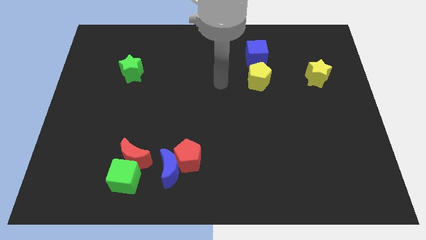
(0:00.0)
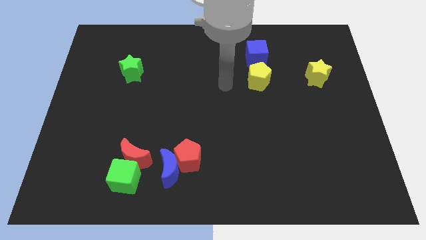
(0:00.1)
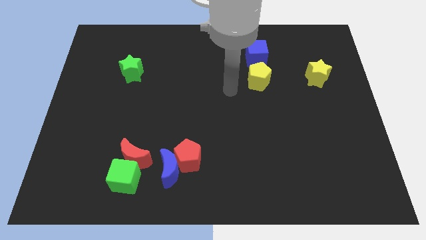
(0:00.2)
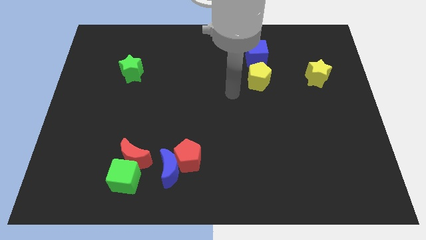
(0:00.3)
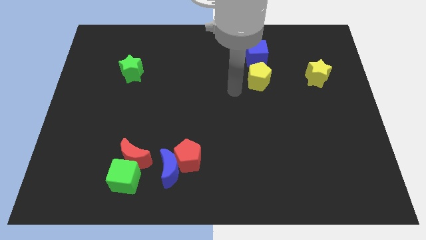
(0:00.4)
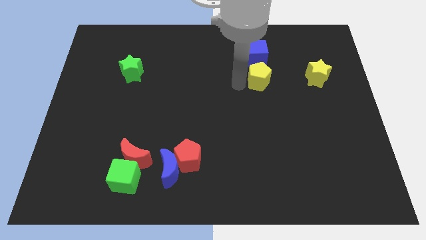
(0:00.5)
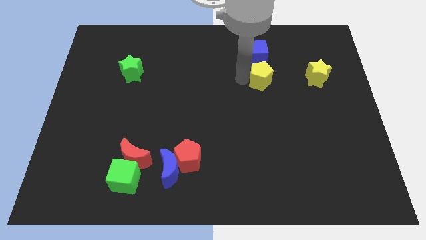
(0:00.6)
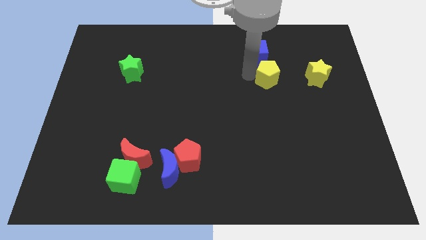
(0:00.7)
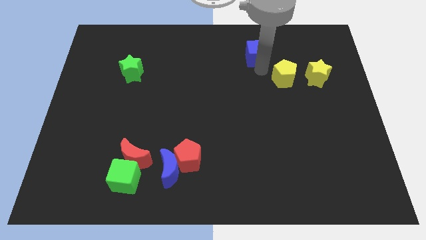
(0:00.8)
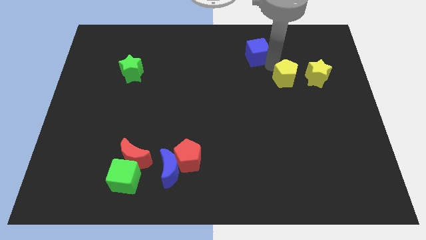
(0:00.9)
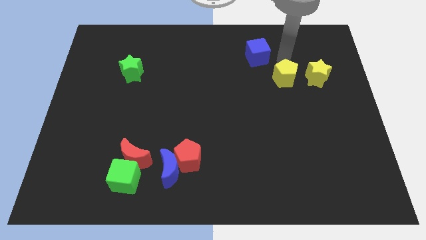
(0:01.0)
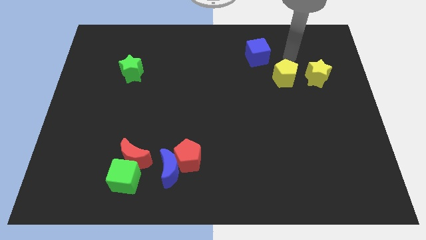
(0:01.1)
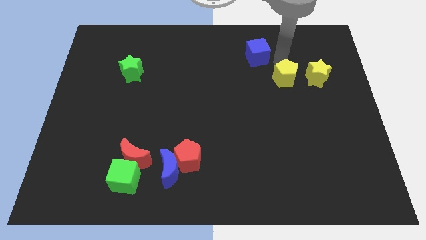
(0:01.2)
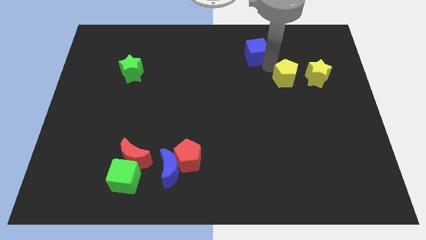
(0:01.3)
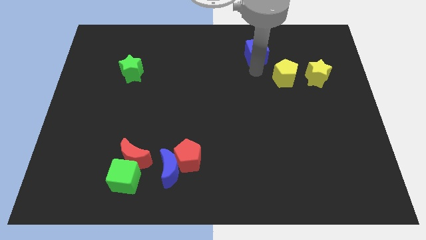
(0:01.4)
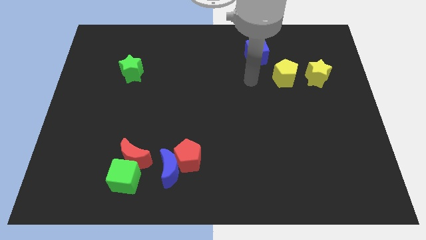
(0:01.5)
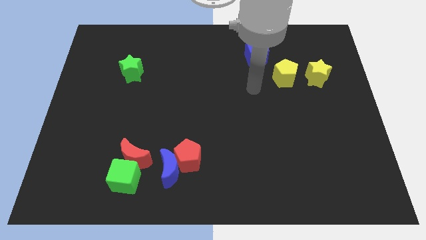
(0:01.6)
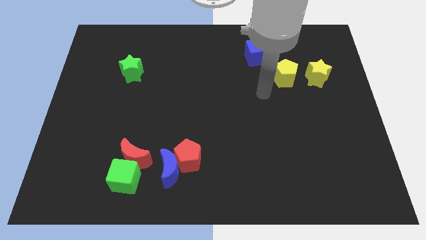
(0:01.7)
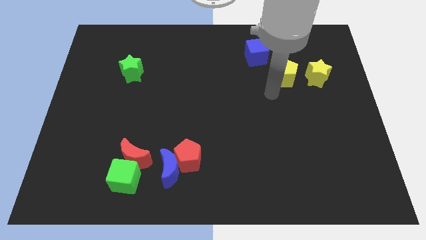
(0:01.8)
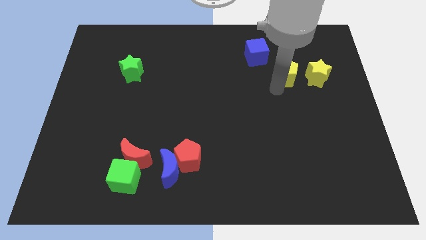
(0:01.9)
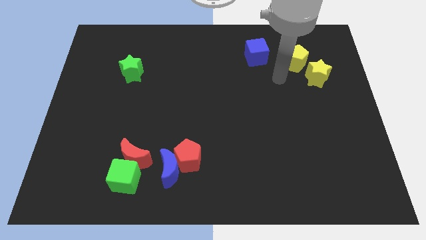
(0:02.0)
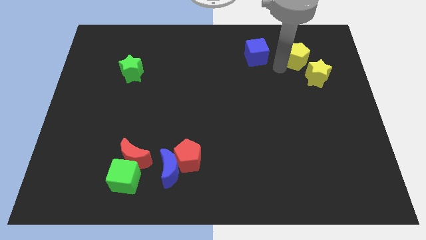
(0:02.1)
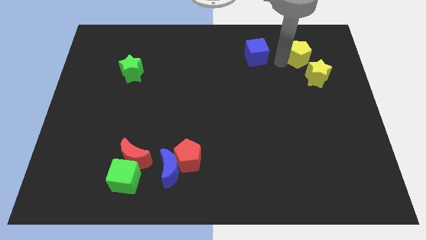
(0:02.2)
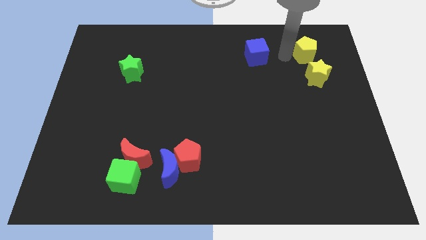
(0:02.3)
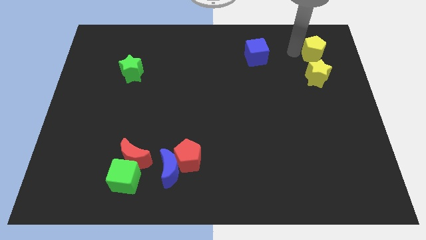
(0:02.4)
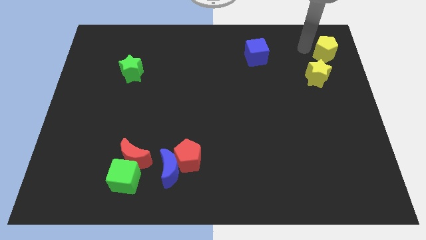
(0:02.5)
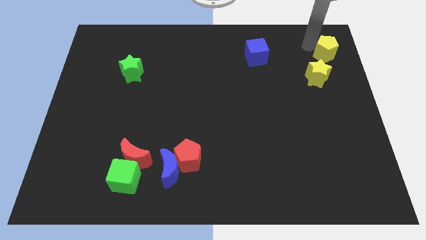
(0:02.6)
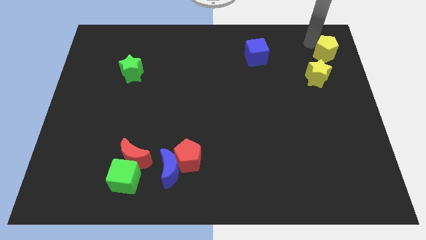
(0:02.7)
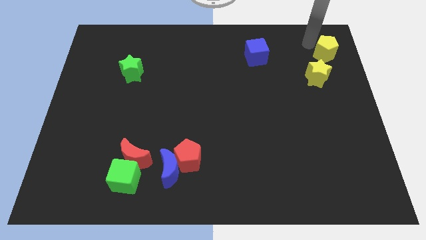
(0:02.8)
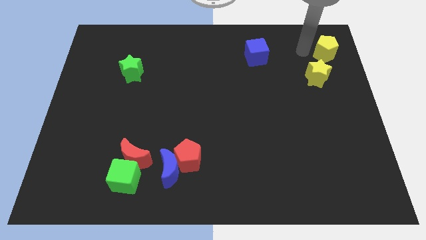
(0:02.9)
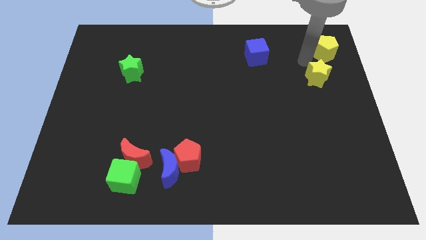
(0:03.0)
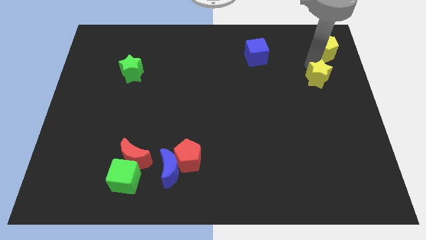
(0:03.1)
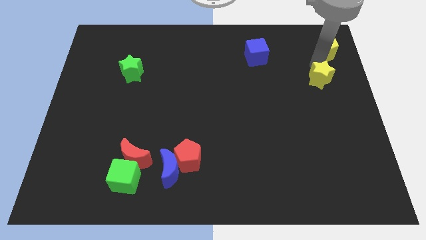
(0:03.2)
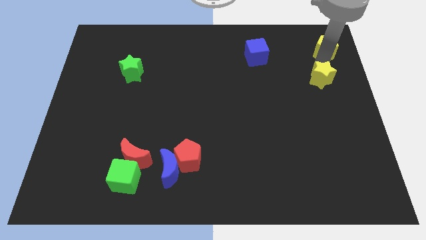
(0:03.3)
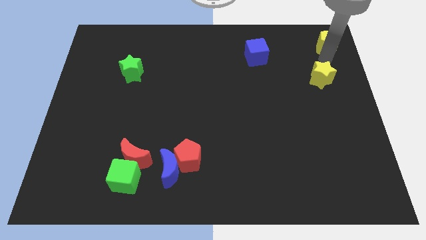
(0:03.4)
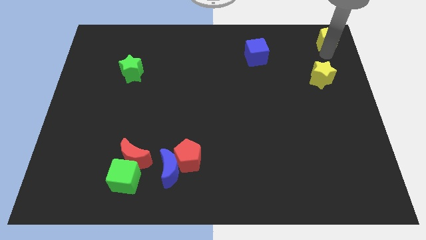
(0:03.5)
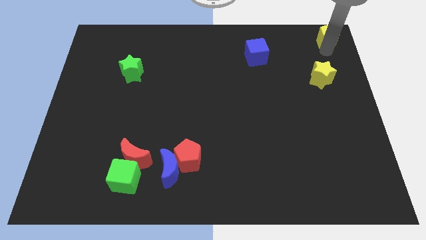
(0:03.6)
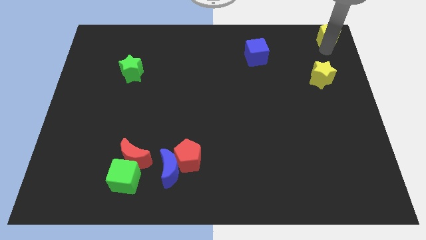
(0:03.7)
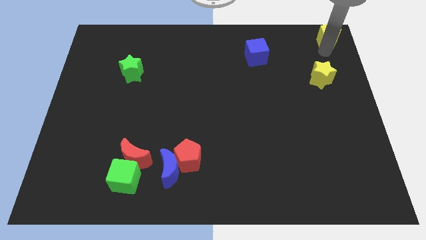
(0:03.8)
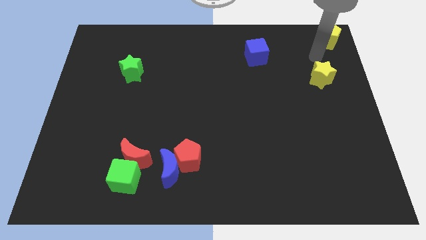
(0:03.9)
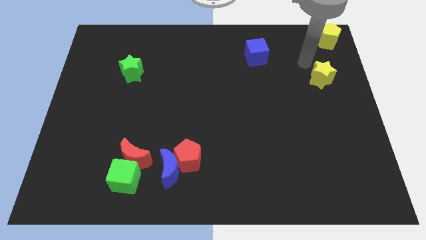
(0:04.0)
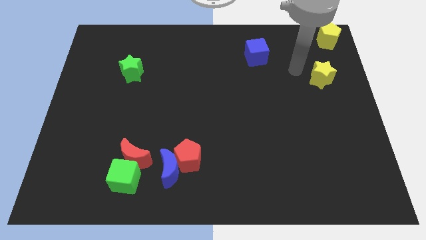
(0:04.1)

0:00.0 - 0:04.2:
move yellow pentagon to the top right corner

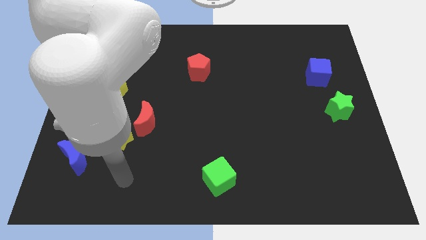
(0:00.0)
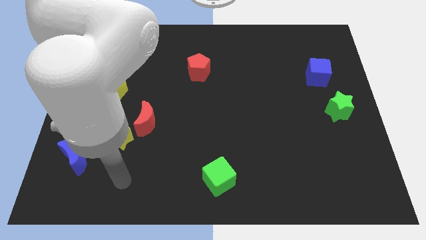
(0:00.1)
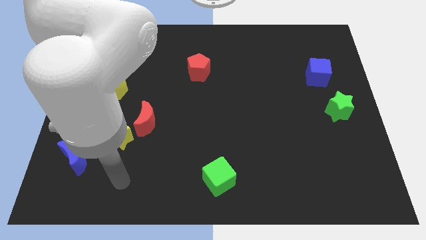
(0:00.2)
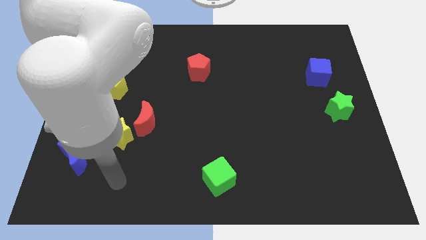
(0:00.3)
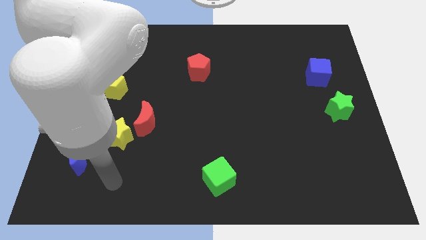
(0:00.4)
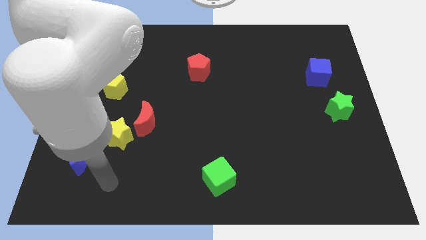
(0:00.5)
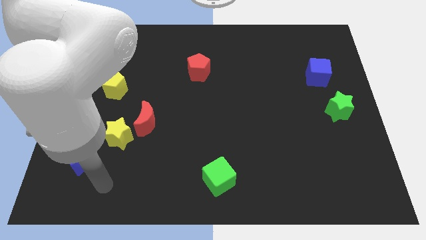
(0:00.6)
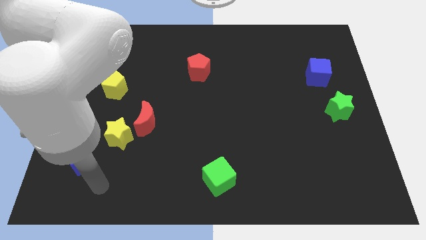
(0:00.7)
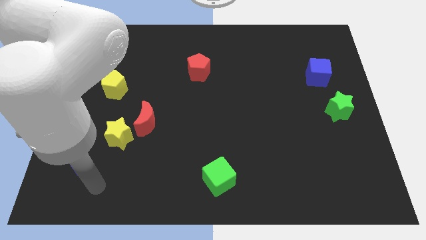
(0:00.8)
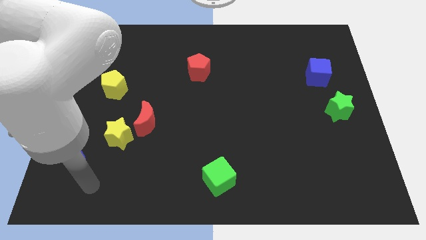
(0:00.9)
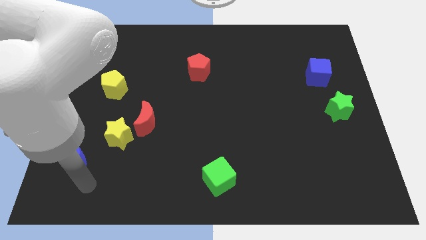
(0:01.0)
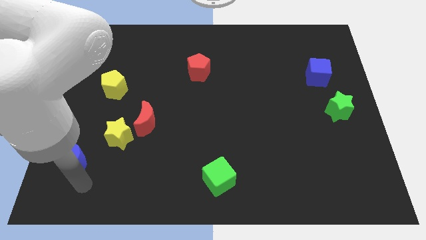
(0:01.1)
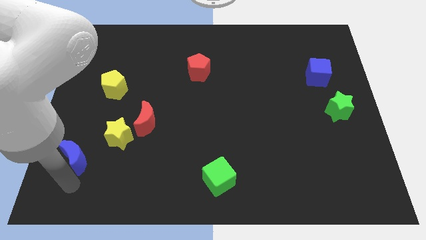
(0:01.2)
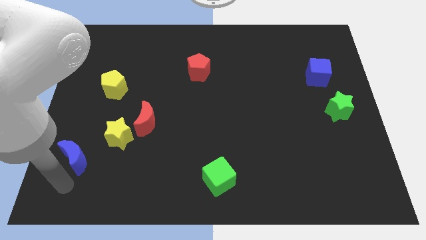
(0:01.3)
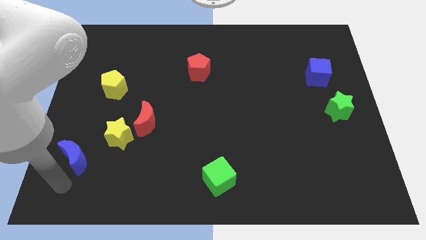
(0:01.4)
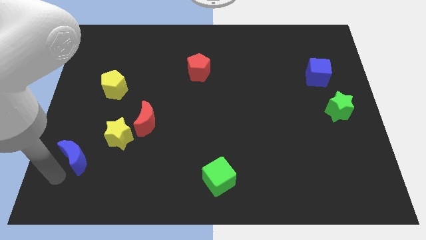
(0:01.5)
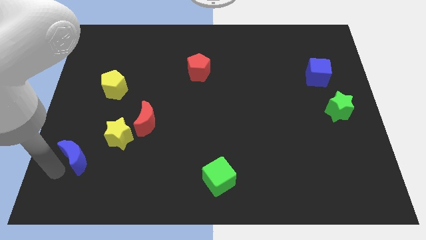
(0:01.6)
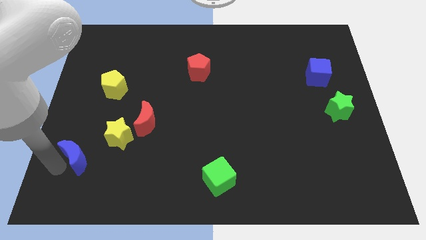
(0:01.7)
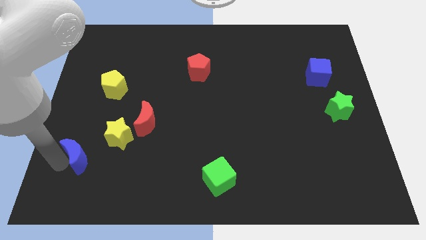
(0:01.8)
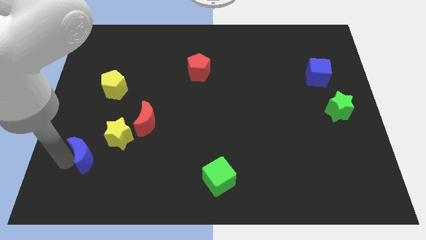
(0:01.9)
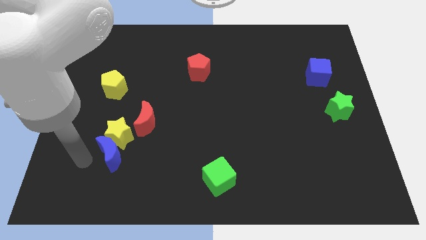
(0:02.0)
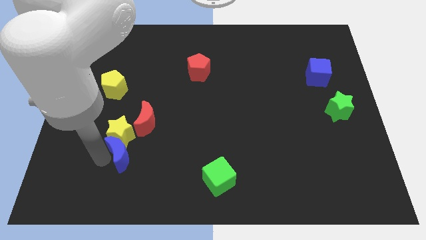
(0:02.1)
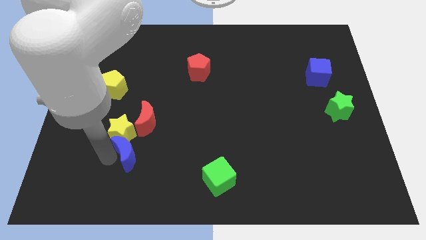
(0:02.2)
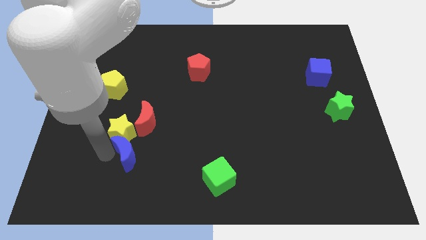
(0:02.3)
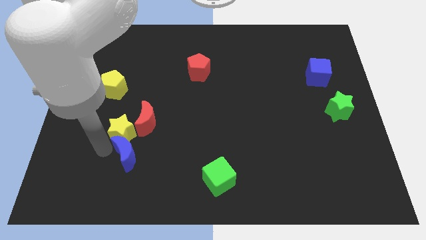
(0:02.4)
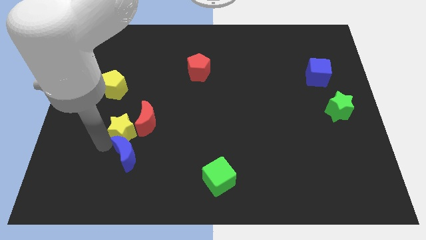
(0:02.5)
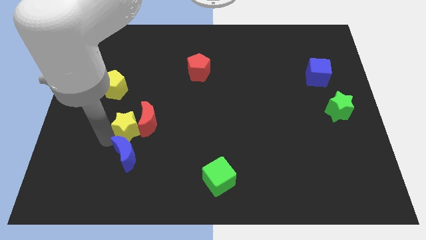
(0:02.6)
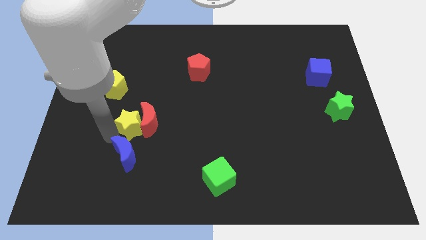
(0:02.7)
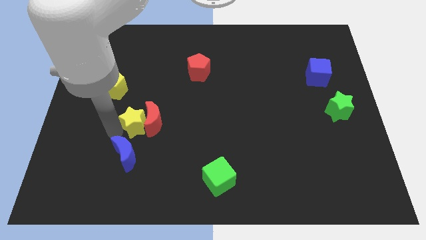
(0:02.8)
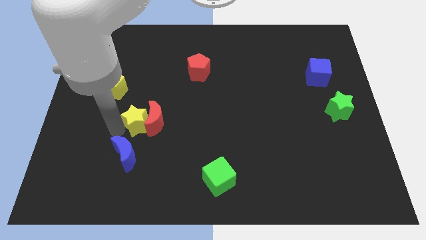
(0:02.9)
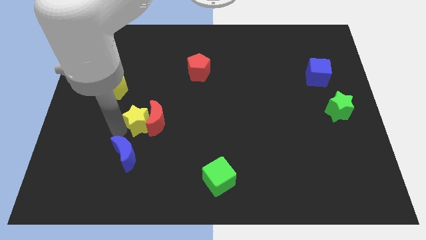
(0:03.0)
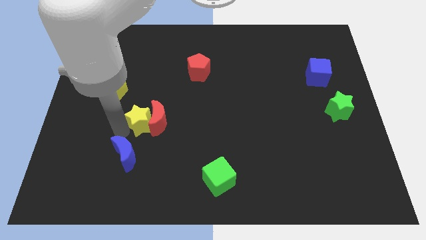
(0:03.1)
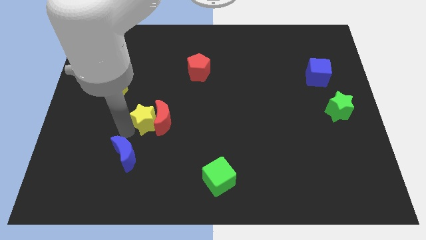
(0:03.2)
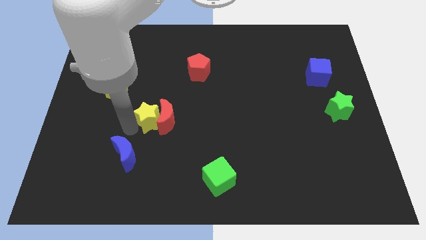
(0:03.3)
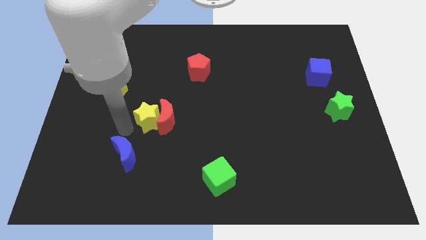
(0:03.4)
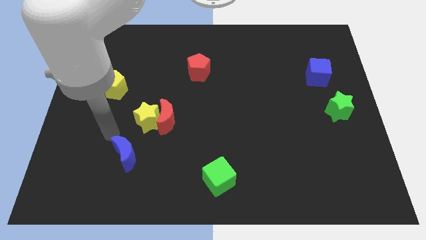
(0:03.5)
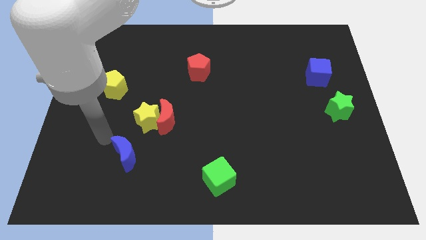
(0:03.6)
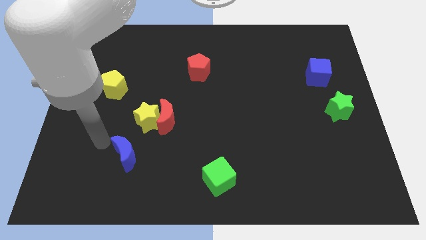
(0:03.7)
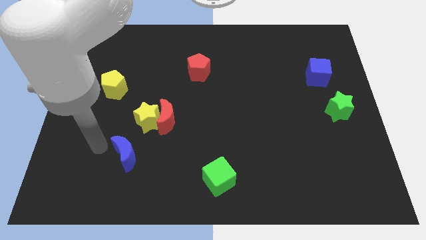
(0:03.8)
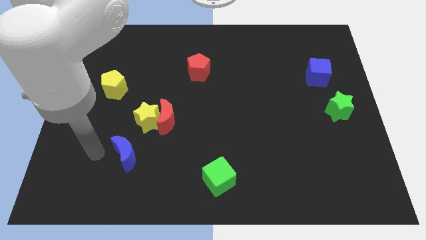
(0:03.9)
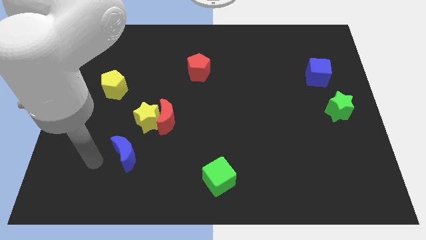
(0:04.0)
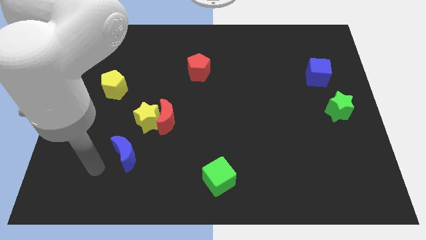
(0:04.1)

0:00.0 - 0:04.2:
move the blue crescent below the yellow star

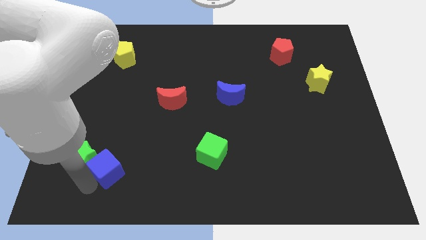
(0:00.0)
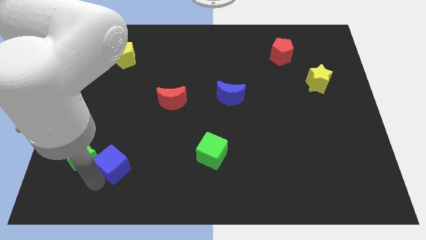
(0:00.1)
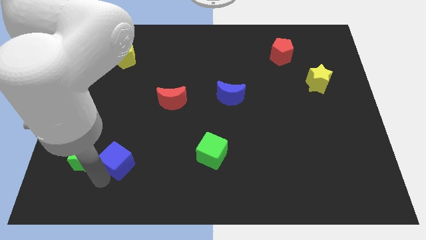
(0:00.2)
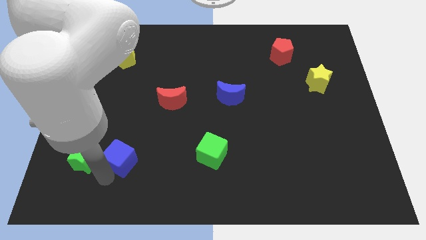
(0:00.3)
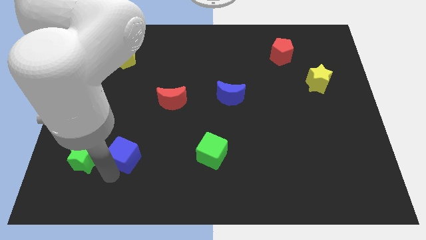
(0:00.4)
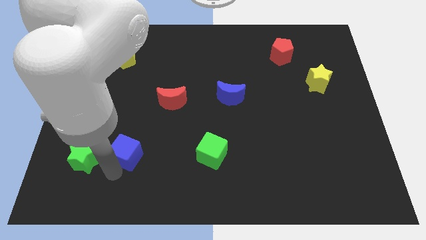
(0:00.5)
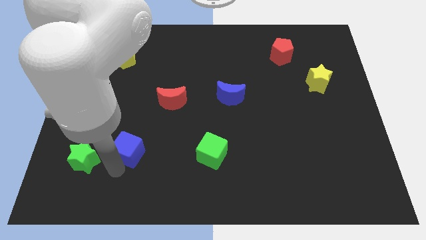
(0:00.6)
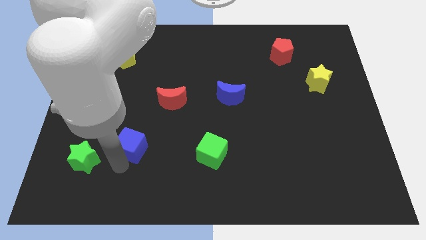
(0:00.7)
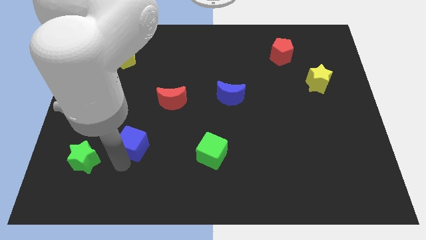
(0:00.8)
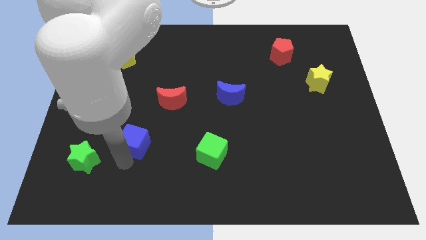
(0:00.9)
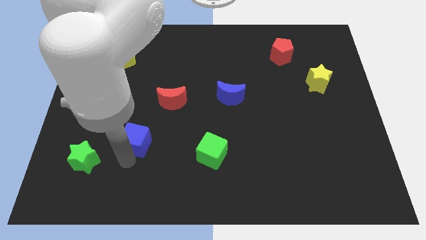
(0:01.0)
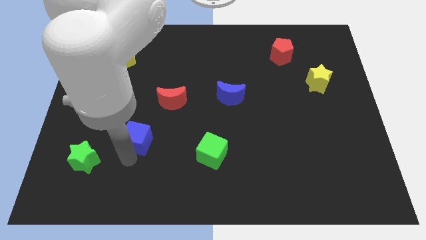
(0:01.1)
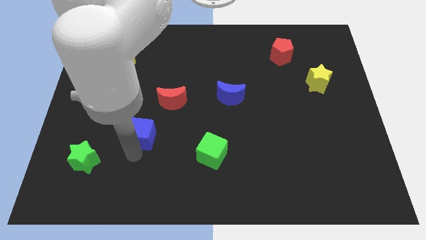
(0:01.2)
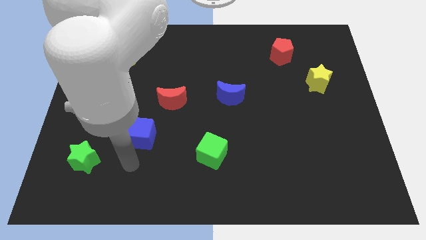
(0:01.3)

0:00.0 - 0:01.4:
separate the blue cube from the green star
